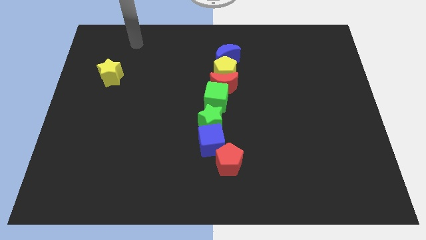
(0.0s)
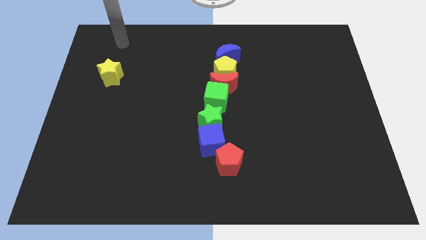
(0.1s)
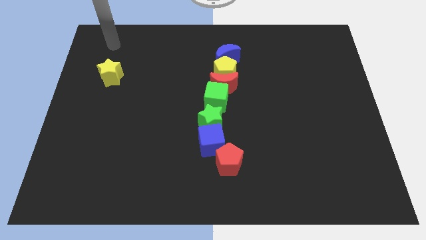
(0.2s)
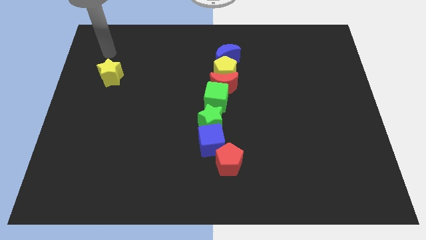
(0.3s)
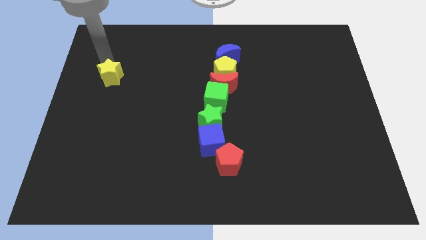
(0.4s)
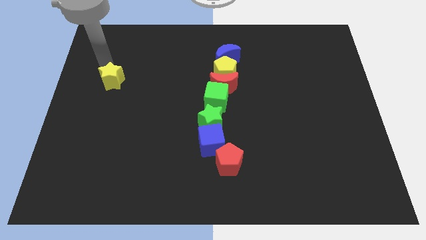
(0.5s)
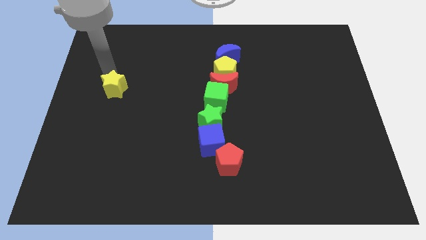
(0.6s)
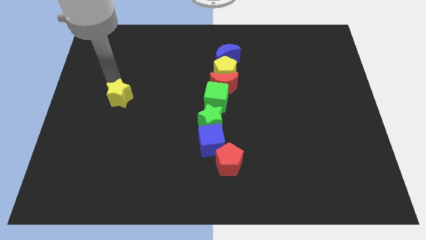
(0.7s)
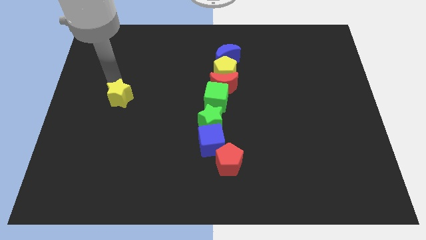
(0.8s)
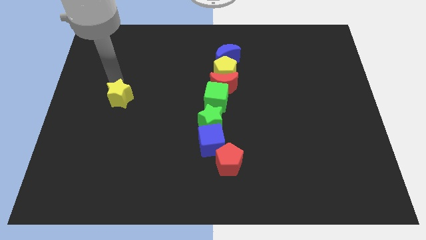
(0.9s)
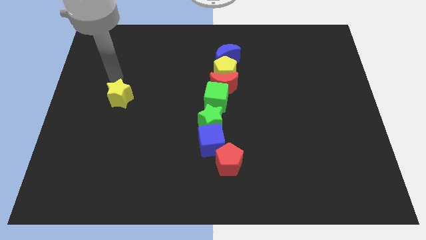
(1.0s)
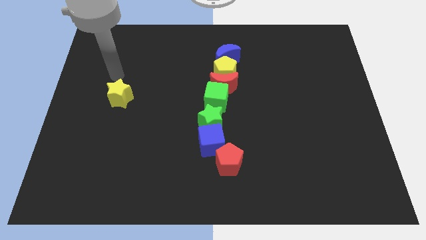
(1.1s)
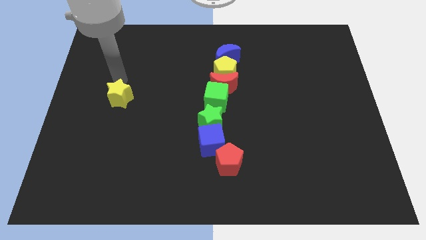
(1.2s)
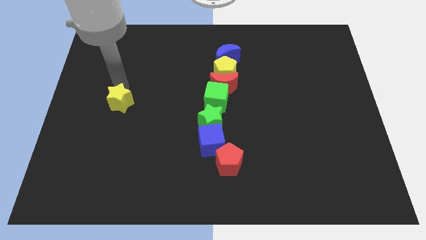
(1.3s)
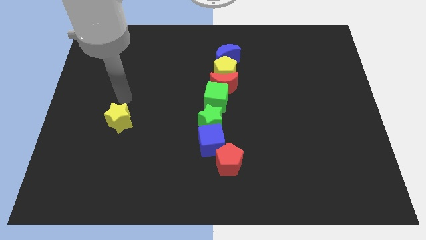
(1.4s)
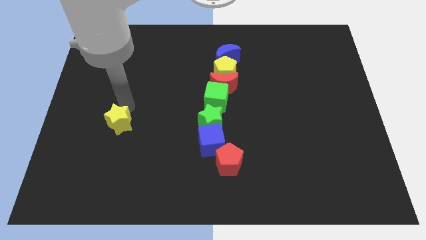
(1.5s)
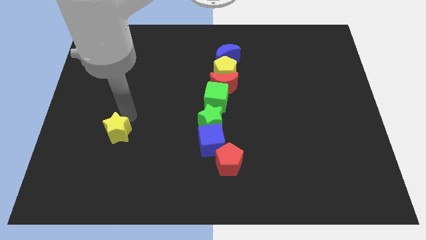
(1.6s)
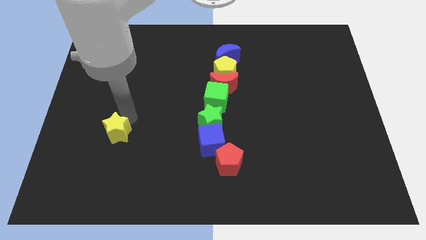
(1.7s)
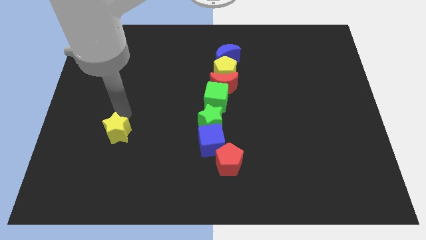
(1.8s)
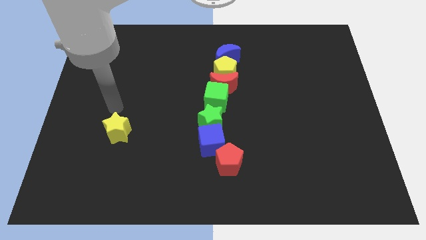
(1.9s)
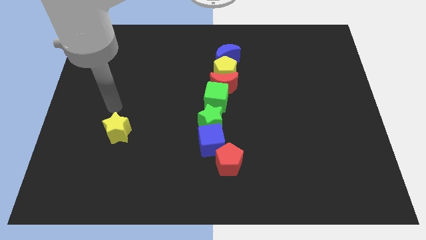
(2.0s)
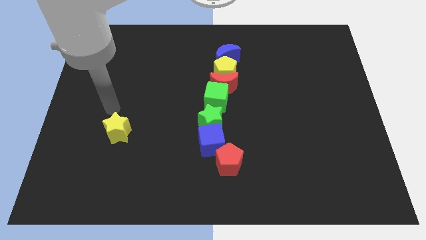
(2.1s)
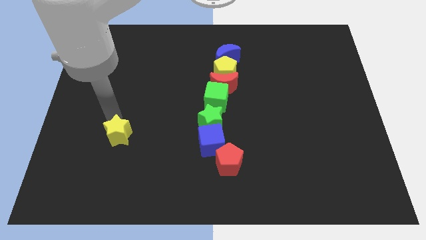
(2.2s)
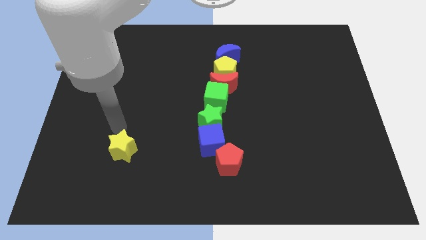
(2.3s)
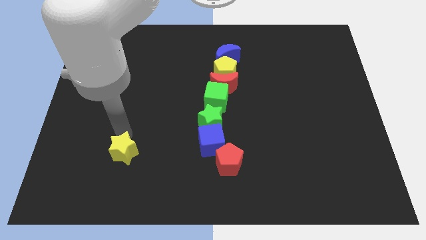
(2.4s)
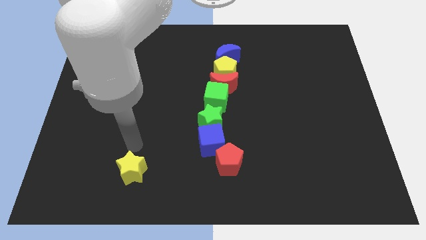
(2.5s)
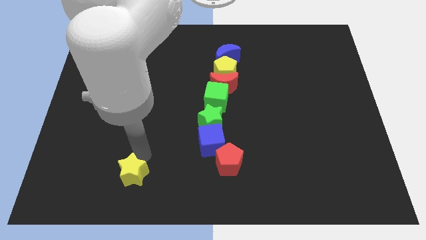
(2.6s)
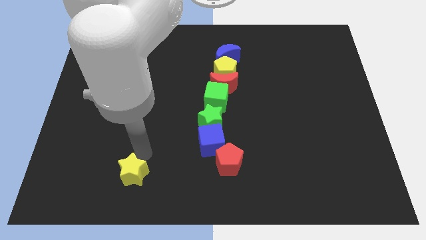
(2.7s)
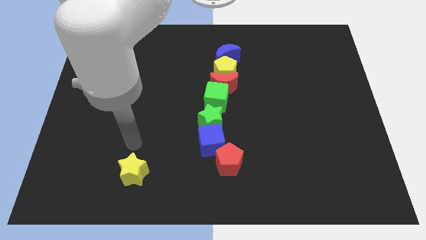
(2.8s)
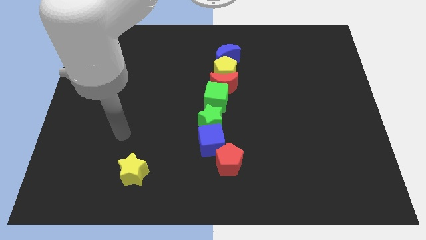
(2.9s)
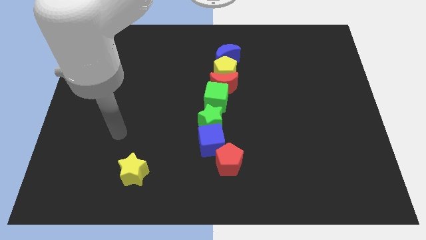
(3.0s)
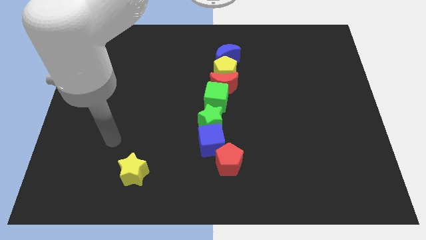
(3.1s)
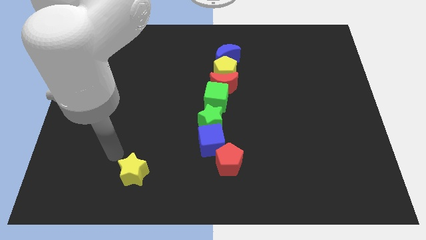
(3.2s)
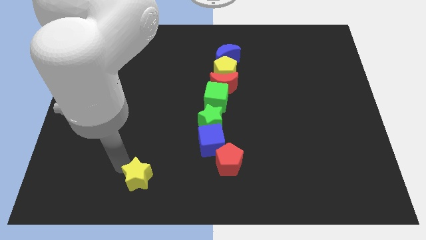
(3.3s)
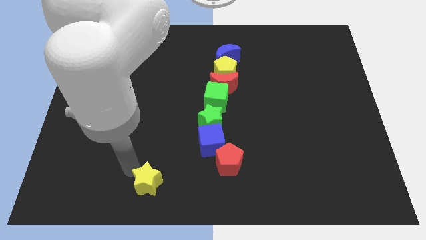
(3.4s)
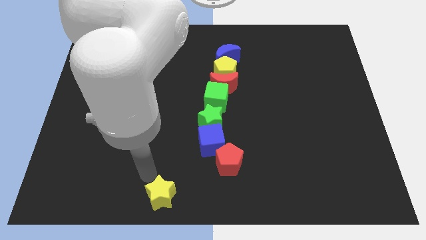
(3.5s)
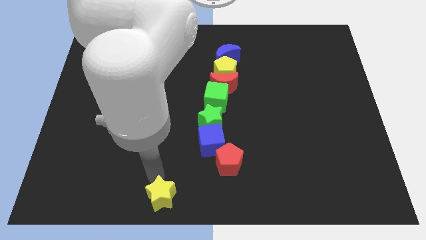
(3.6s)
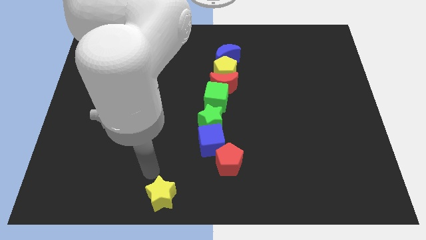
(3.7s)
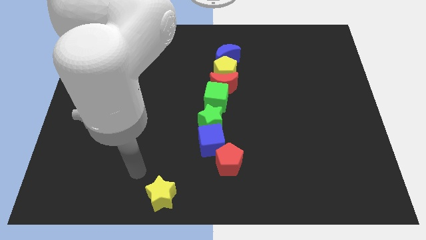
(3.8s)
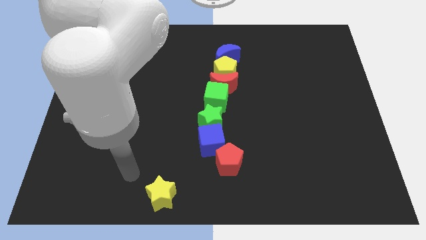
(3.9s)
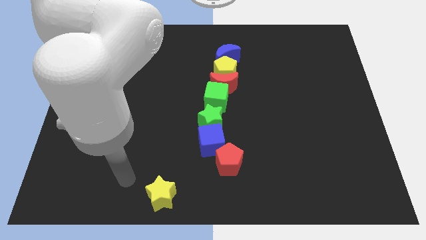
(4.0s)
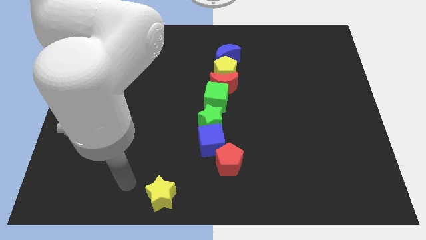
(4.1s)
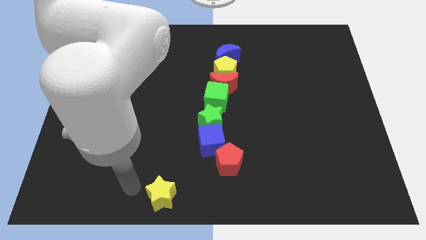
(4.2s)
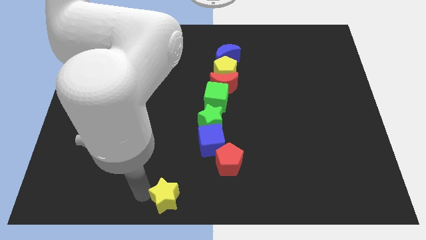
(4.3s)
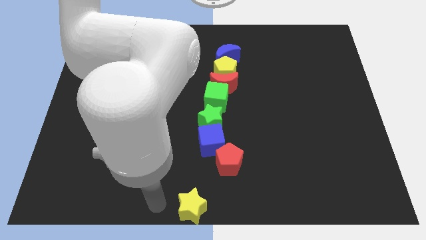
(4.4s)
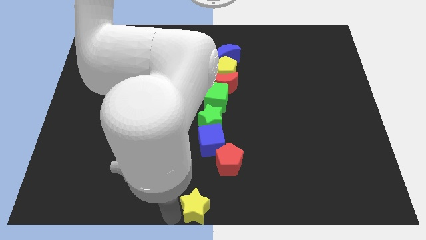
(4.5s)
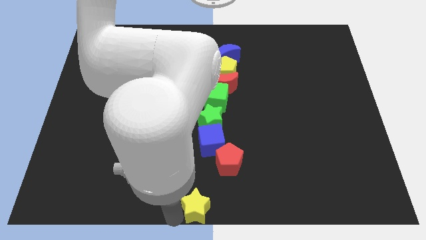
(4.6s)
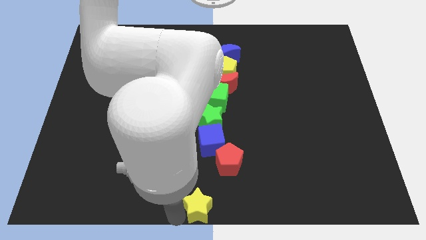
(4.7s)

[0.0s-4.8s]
move the yellow star to the bottom center of the board

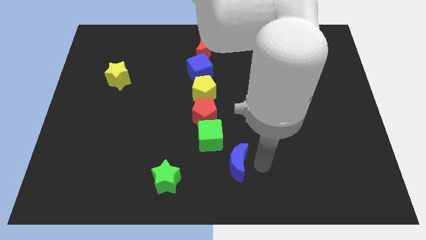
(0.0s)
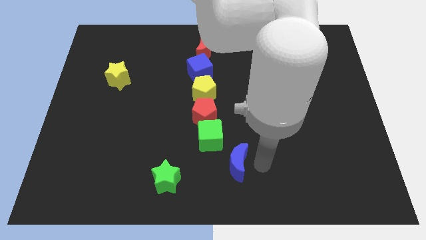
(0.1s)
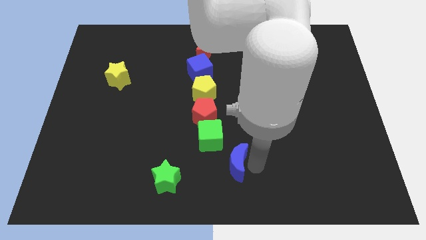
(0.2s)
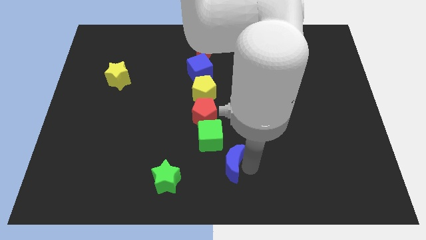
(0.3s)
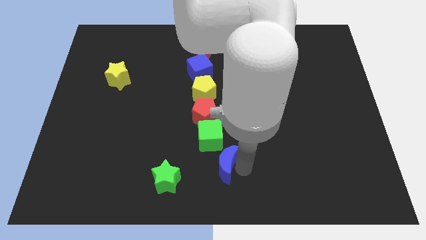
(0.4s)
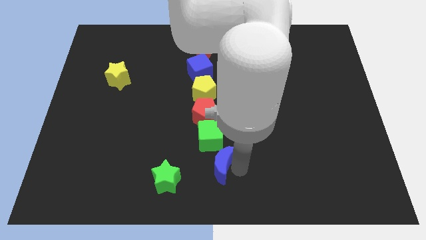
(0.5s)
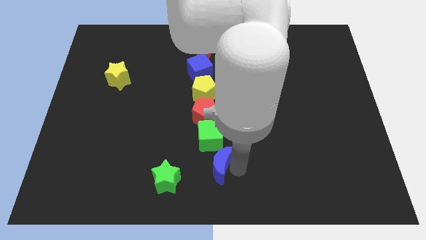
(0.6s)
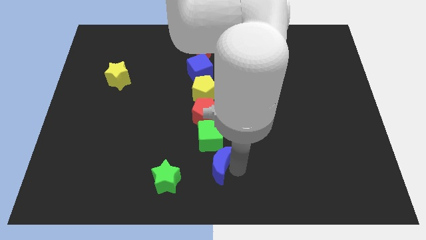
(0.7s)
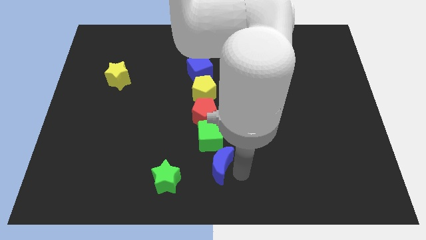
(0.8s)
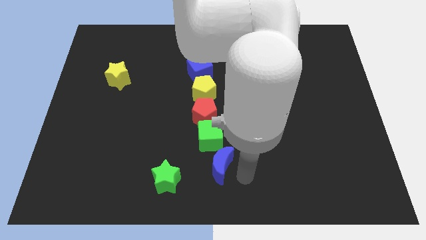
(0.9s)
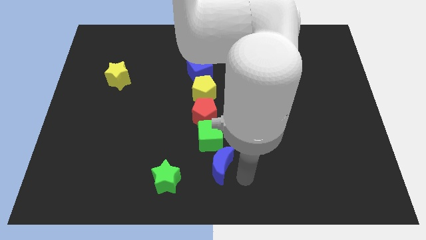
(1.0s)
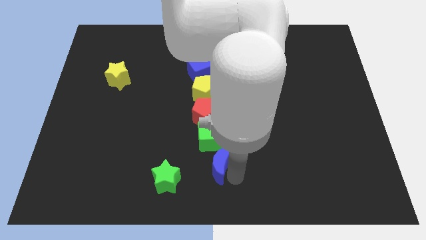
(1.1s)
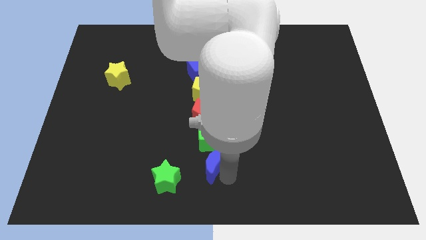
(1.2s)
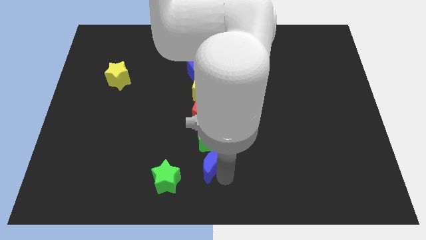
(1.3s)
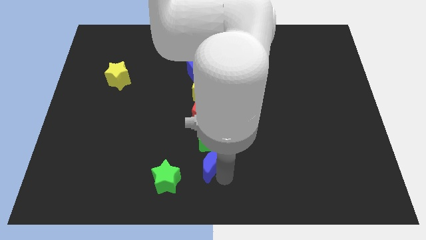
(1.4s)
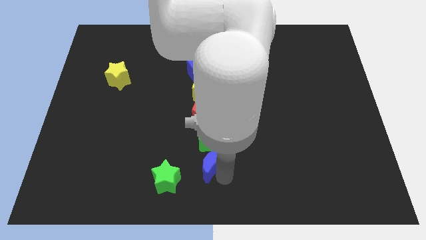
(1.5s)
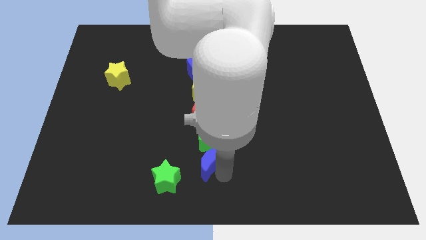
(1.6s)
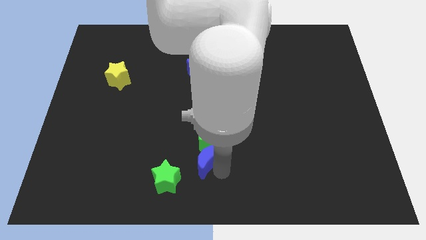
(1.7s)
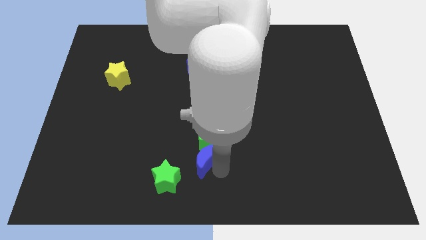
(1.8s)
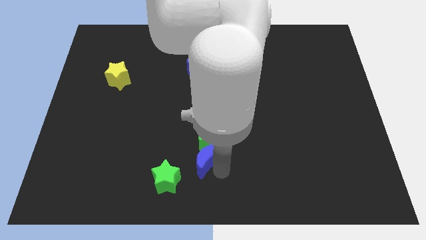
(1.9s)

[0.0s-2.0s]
place the blue moon to the bottom side of the green cube

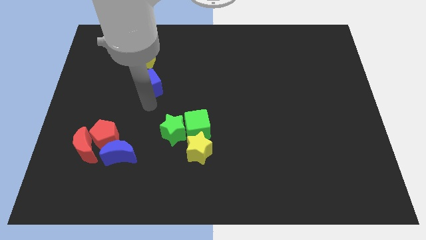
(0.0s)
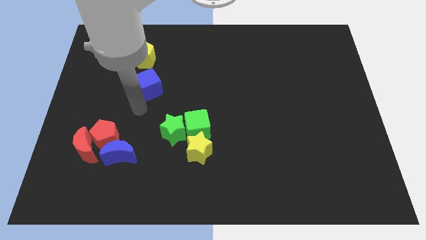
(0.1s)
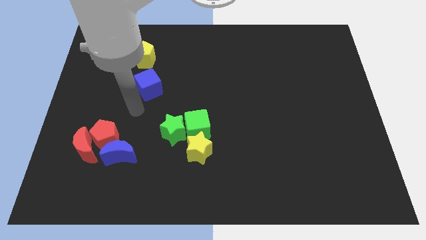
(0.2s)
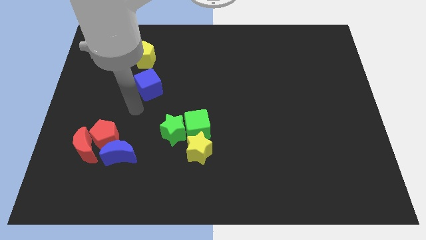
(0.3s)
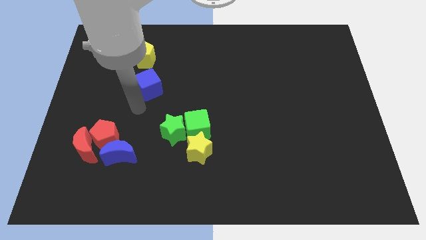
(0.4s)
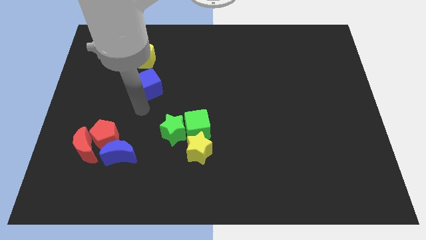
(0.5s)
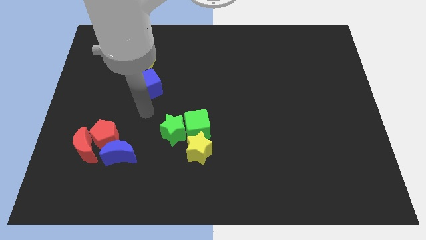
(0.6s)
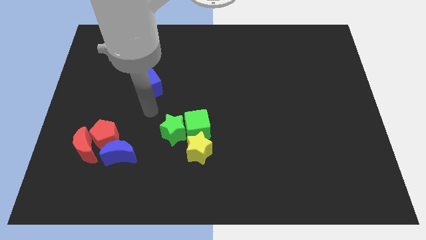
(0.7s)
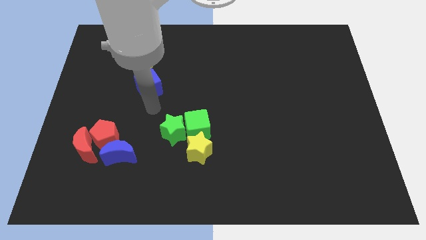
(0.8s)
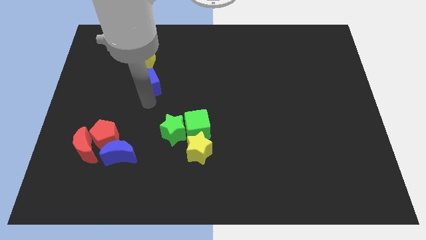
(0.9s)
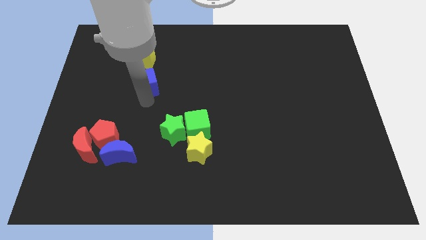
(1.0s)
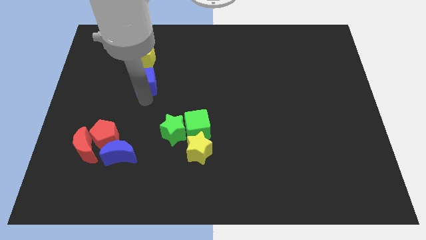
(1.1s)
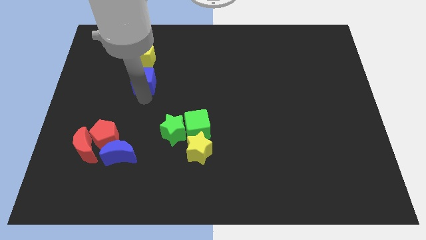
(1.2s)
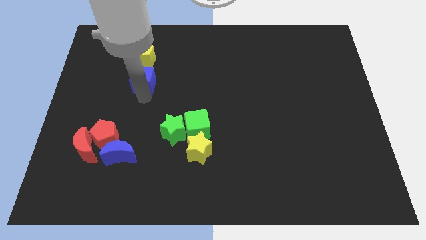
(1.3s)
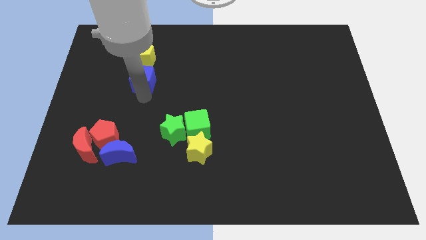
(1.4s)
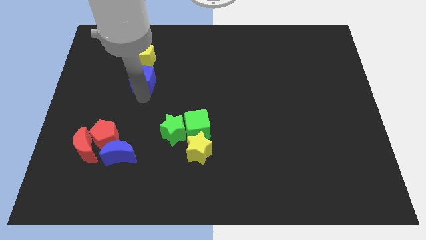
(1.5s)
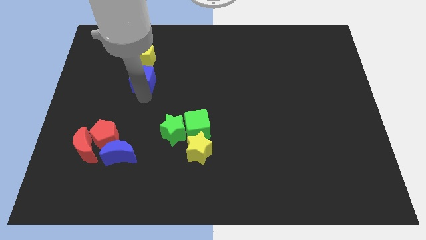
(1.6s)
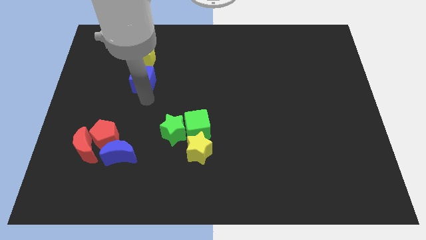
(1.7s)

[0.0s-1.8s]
place the blue cube in to yellow pentagon

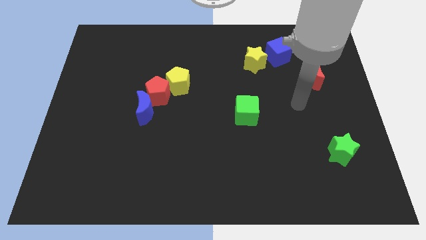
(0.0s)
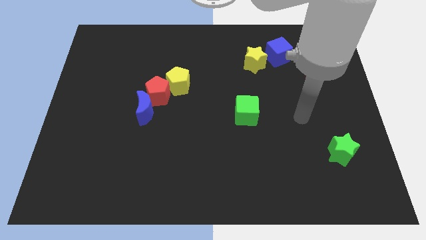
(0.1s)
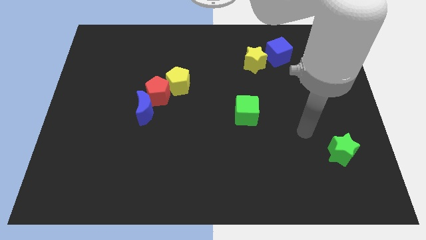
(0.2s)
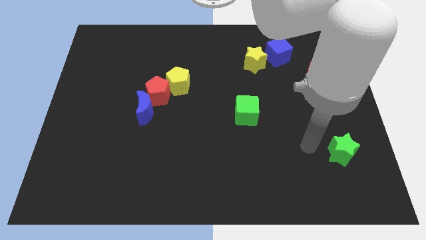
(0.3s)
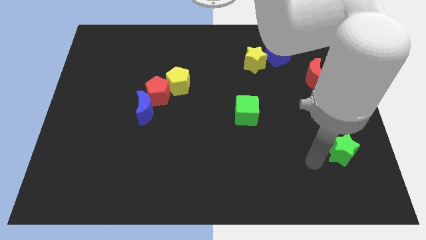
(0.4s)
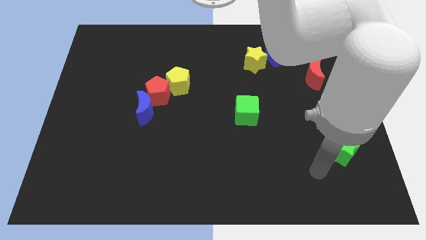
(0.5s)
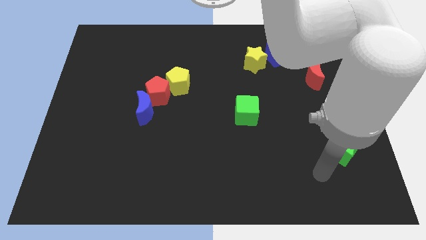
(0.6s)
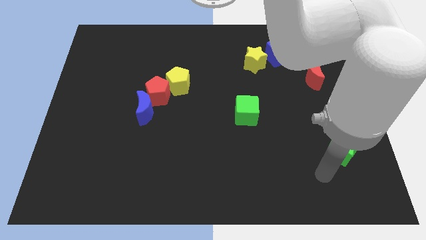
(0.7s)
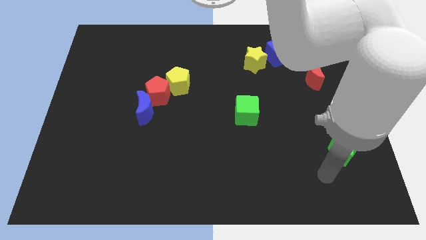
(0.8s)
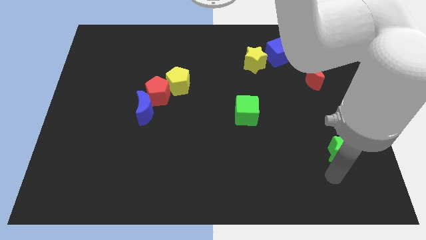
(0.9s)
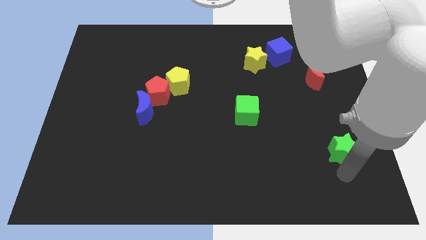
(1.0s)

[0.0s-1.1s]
point your arm at the bottom of the green star
